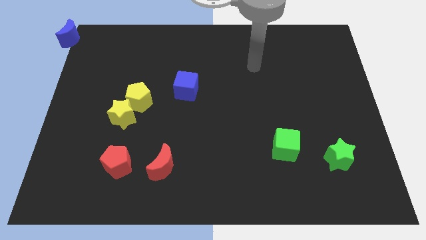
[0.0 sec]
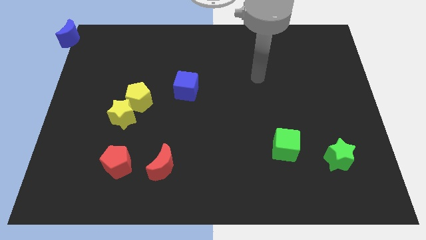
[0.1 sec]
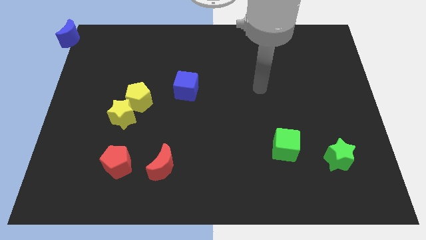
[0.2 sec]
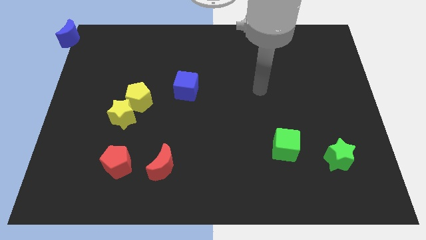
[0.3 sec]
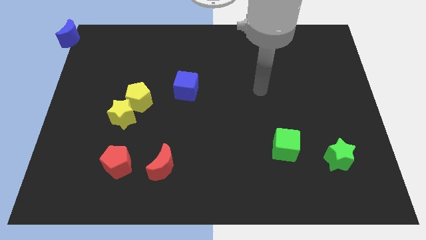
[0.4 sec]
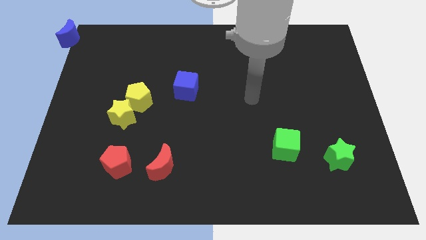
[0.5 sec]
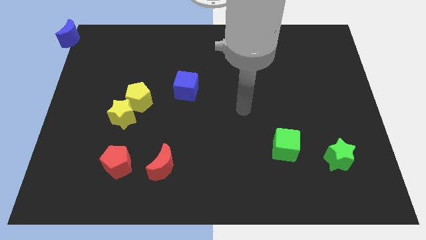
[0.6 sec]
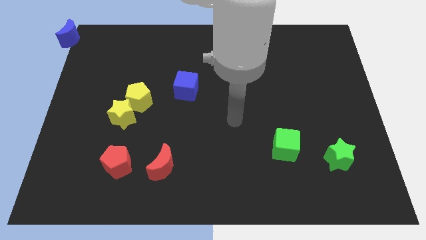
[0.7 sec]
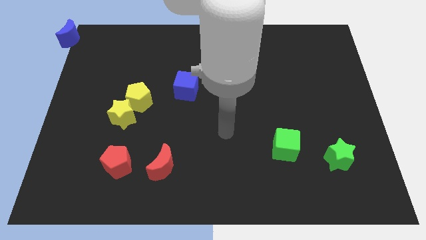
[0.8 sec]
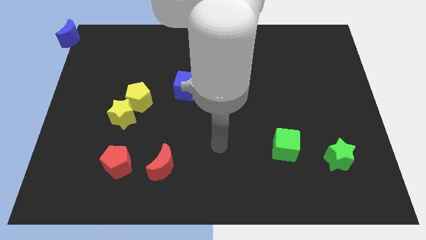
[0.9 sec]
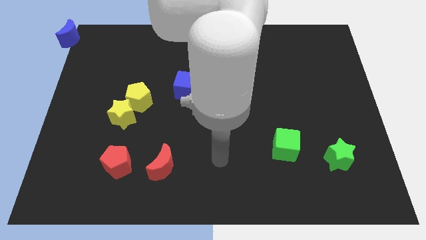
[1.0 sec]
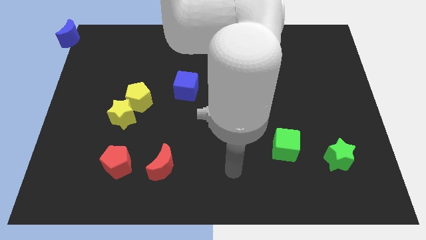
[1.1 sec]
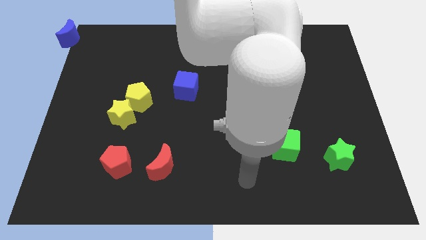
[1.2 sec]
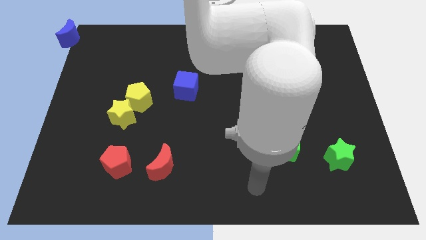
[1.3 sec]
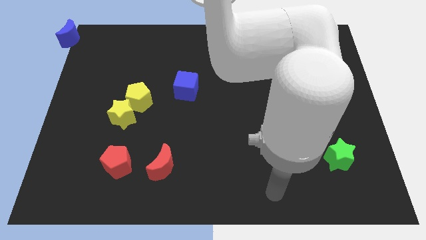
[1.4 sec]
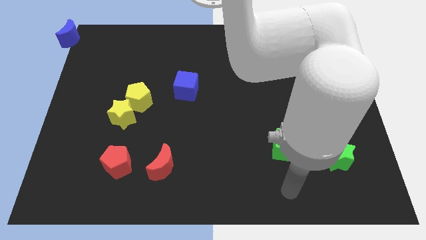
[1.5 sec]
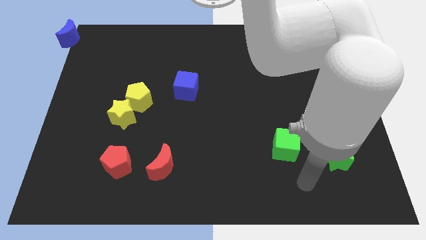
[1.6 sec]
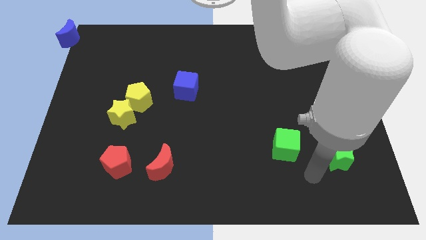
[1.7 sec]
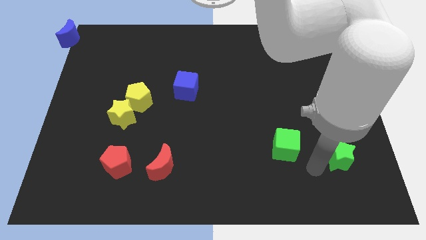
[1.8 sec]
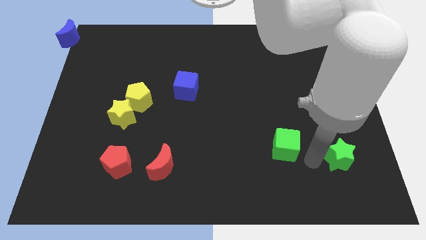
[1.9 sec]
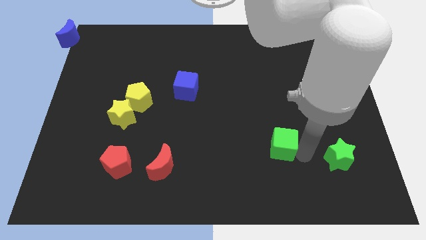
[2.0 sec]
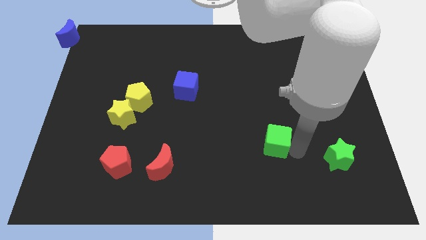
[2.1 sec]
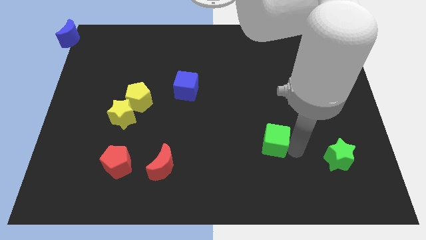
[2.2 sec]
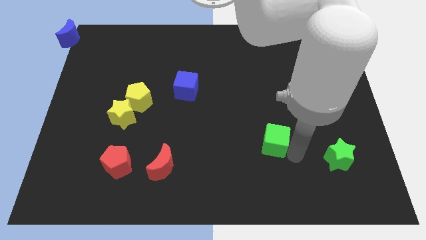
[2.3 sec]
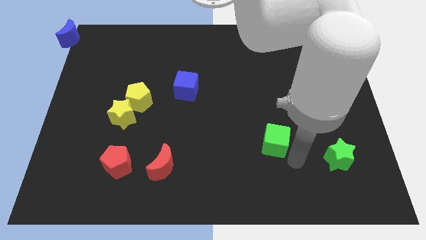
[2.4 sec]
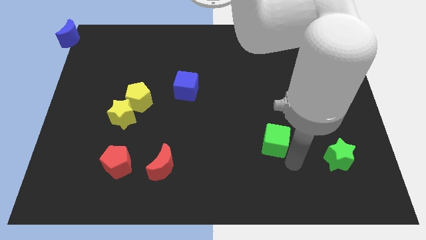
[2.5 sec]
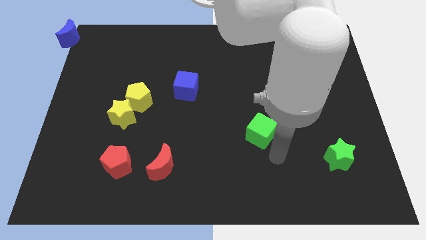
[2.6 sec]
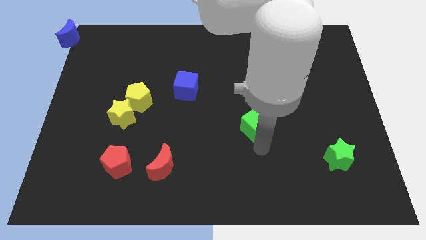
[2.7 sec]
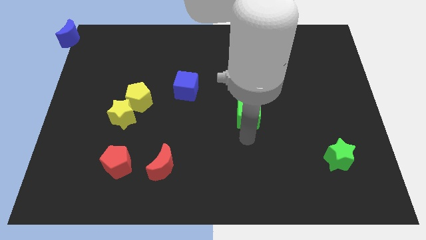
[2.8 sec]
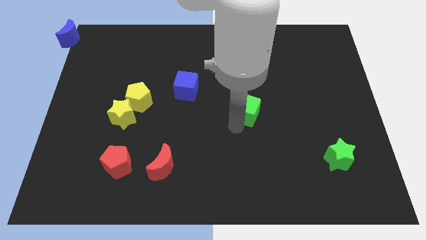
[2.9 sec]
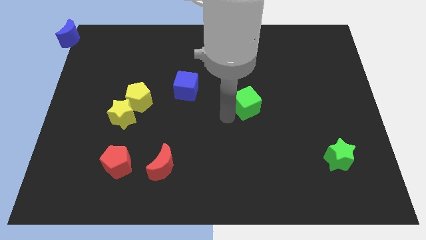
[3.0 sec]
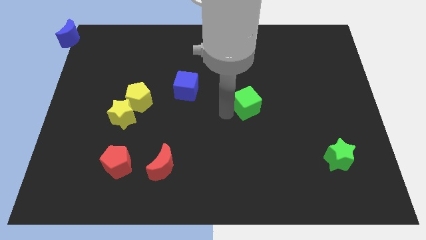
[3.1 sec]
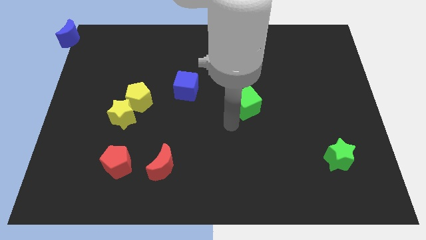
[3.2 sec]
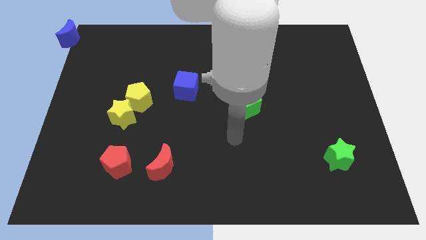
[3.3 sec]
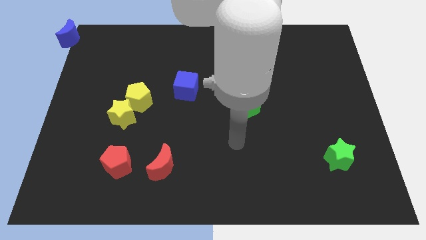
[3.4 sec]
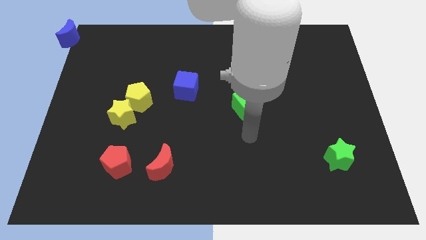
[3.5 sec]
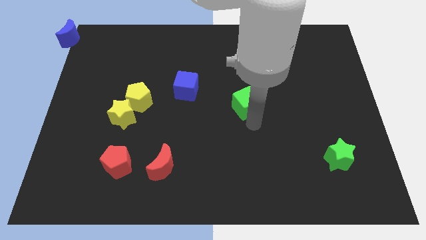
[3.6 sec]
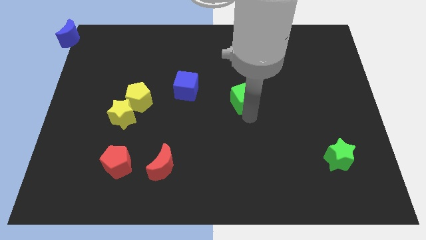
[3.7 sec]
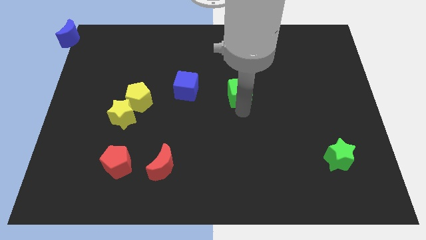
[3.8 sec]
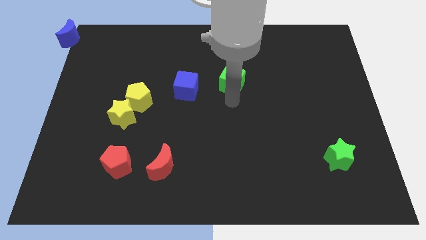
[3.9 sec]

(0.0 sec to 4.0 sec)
place green cube to the right of the blue cube

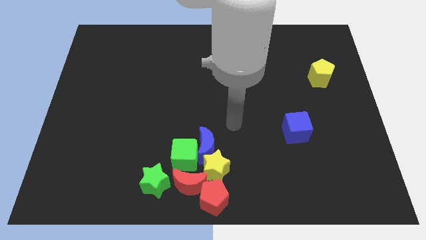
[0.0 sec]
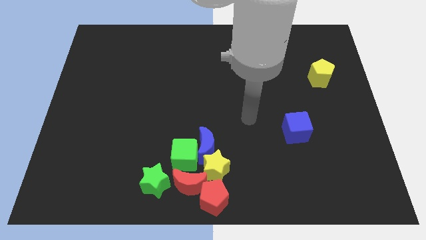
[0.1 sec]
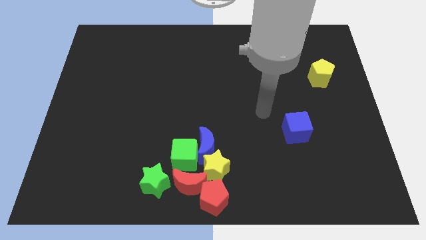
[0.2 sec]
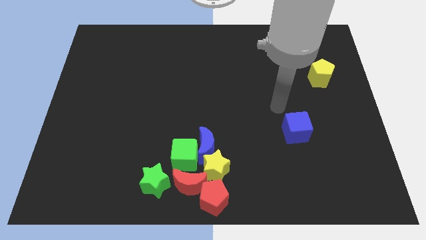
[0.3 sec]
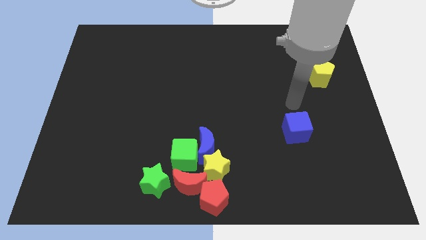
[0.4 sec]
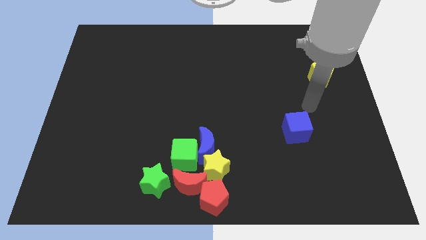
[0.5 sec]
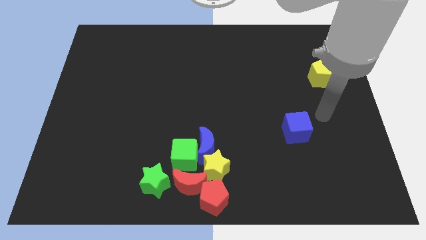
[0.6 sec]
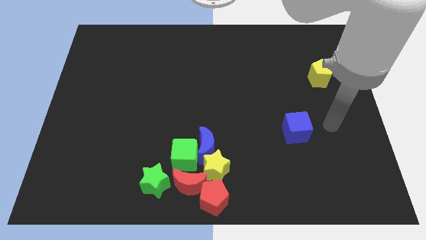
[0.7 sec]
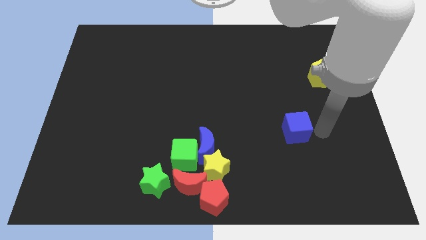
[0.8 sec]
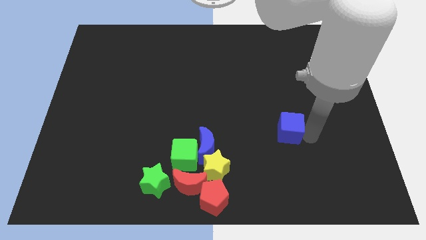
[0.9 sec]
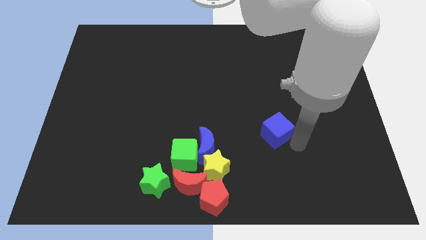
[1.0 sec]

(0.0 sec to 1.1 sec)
touch the blue cube with your arm

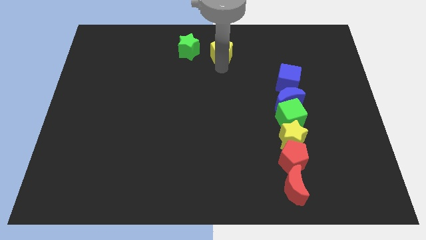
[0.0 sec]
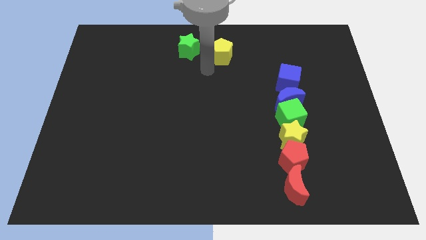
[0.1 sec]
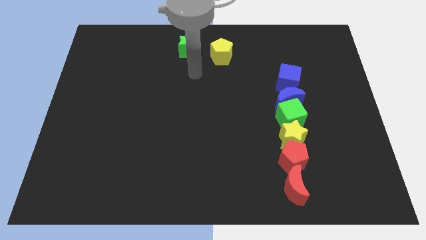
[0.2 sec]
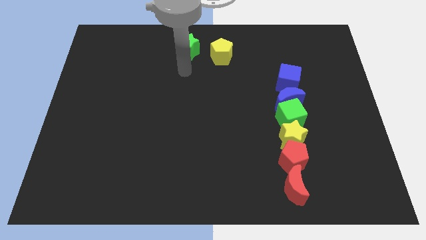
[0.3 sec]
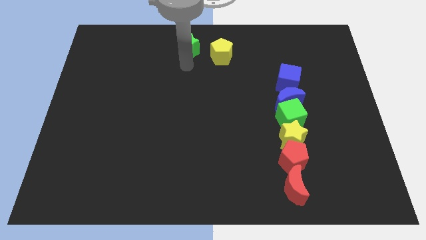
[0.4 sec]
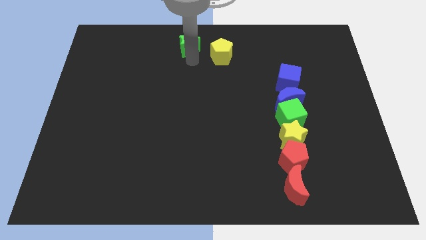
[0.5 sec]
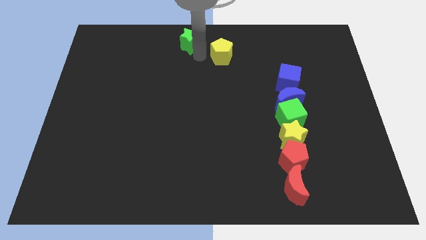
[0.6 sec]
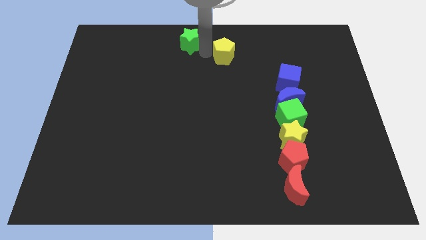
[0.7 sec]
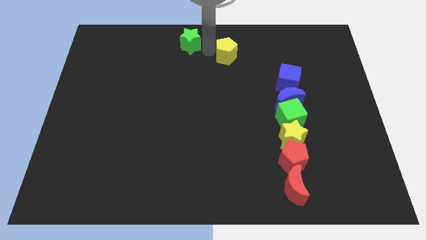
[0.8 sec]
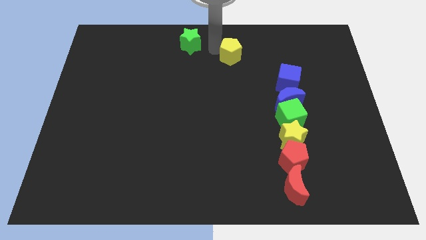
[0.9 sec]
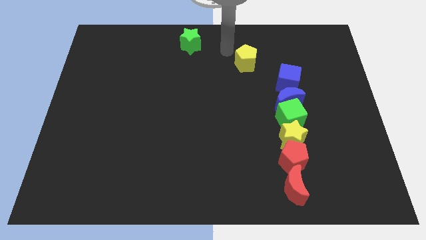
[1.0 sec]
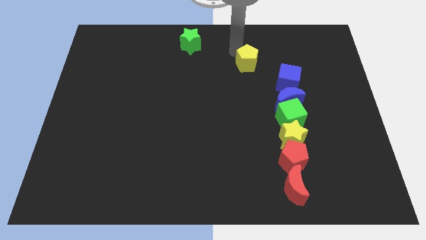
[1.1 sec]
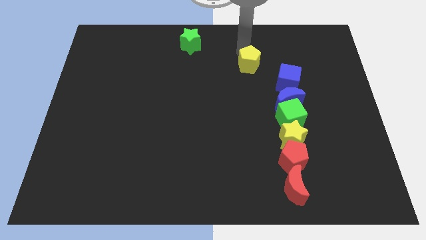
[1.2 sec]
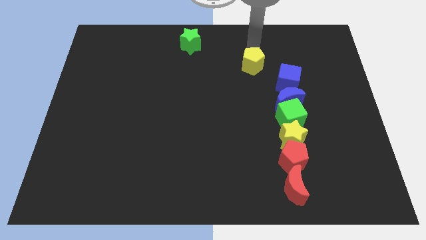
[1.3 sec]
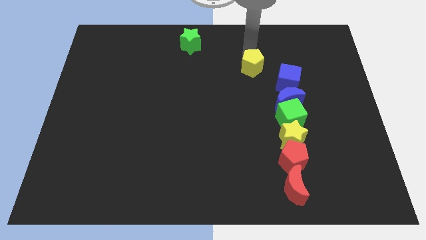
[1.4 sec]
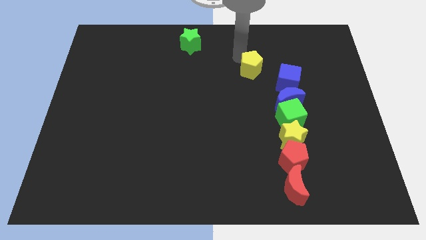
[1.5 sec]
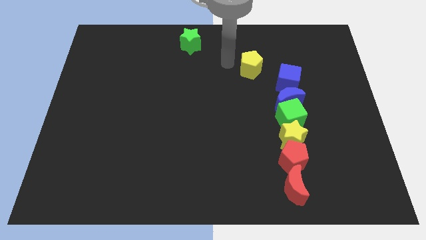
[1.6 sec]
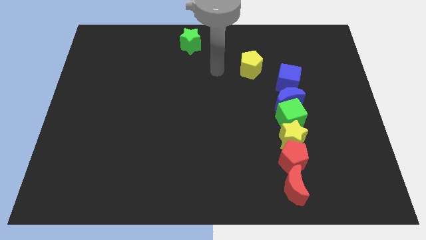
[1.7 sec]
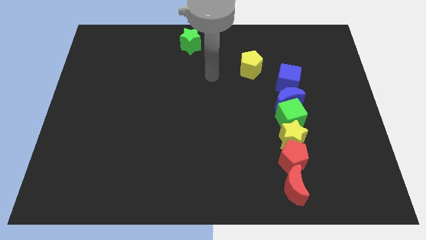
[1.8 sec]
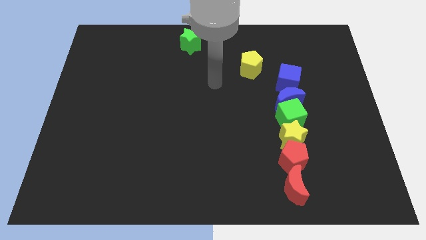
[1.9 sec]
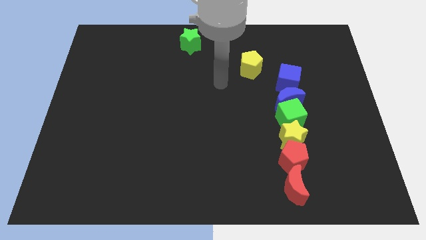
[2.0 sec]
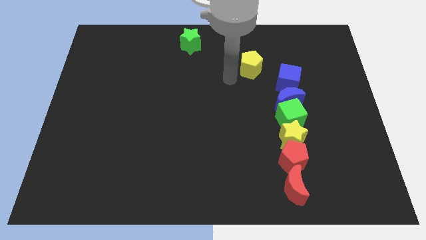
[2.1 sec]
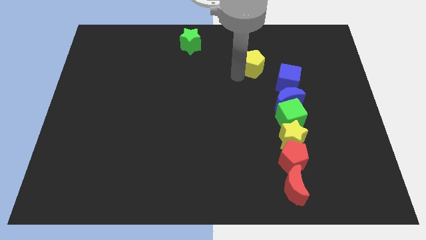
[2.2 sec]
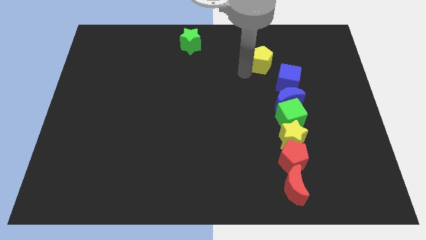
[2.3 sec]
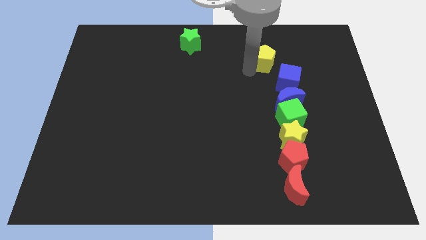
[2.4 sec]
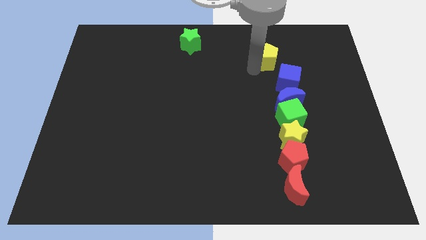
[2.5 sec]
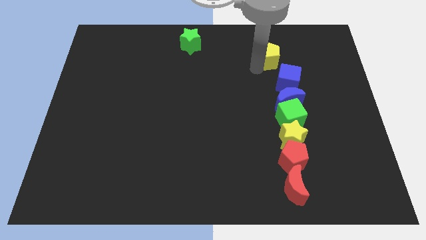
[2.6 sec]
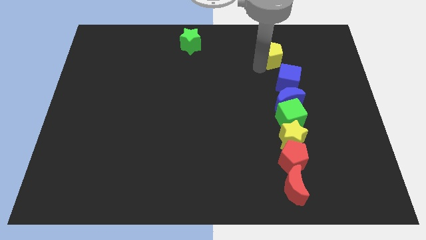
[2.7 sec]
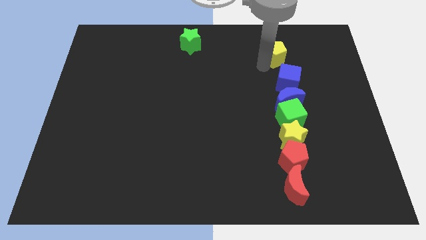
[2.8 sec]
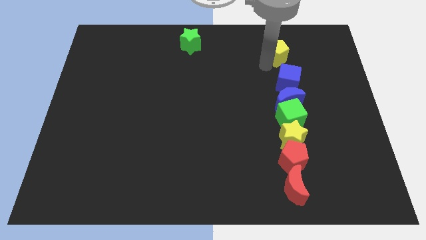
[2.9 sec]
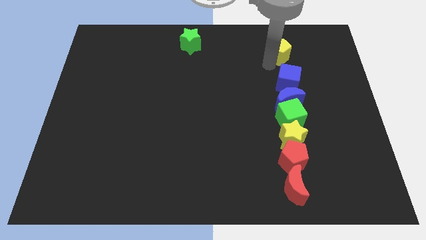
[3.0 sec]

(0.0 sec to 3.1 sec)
put the yellow pentagon above the blue cube

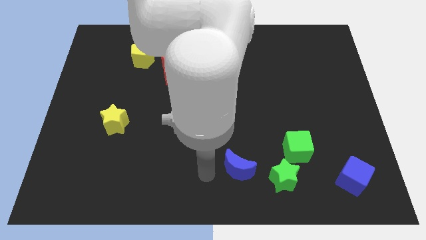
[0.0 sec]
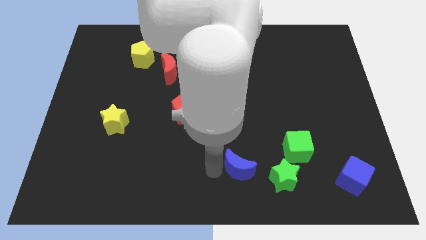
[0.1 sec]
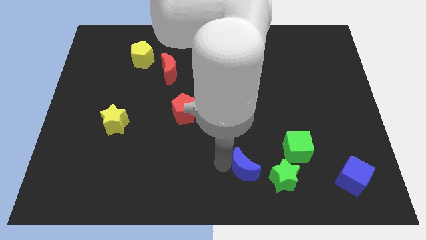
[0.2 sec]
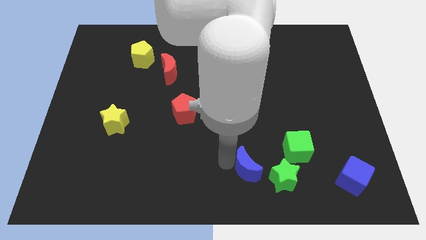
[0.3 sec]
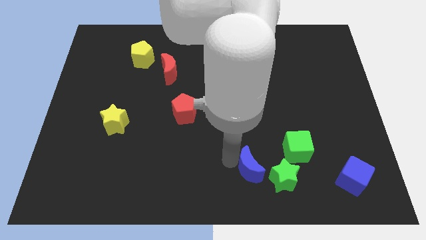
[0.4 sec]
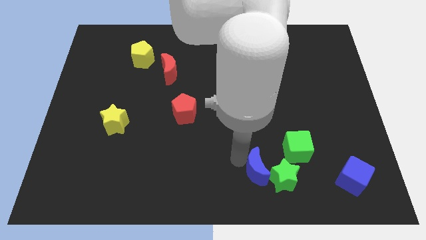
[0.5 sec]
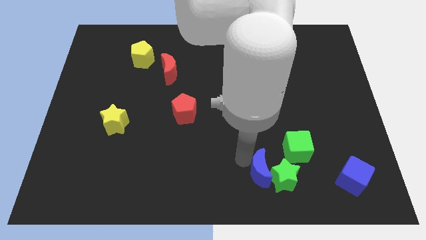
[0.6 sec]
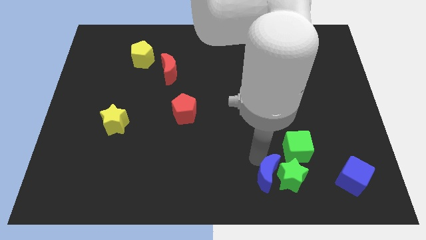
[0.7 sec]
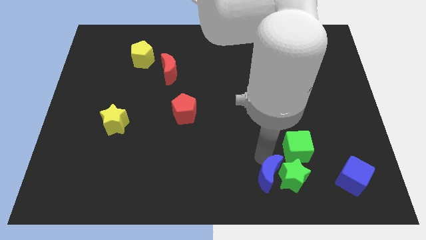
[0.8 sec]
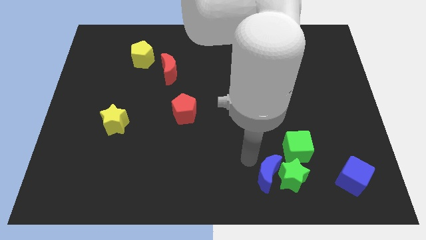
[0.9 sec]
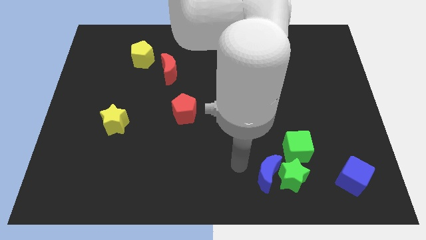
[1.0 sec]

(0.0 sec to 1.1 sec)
push the blue crescent into the green star
